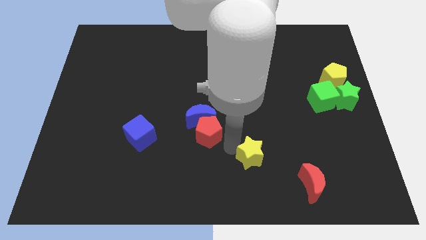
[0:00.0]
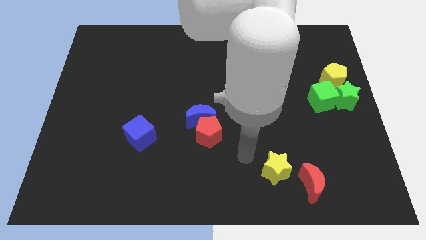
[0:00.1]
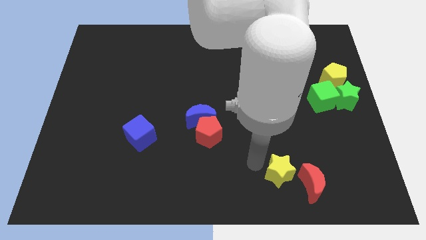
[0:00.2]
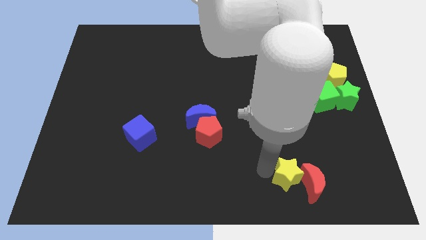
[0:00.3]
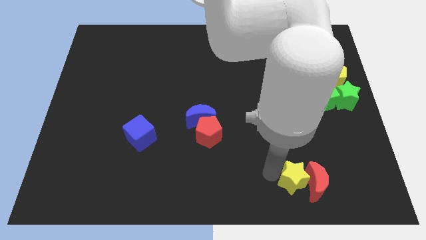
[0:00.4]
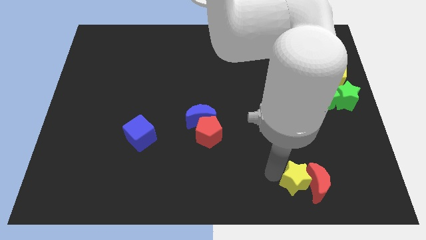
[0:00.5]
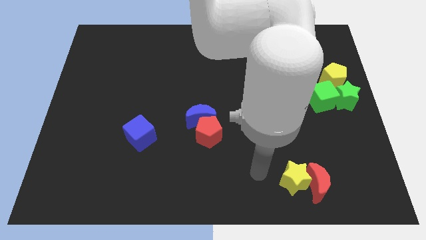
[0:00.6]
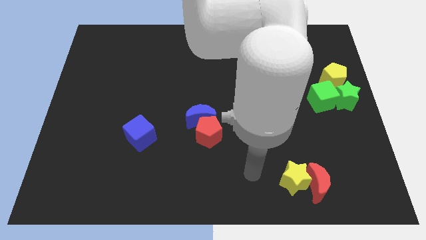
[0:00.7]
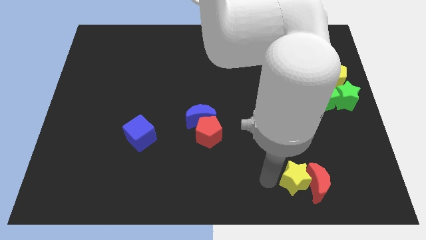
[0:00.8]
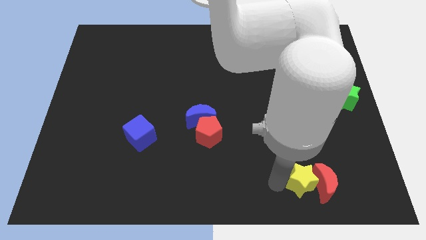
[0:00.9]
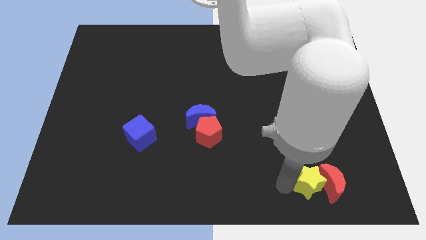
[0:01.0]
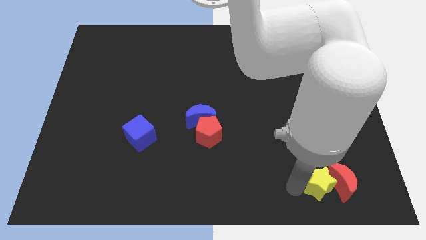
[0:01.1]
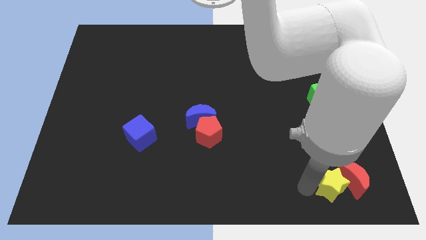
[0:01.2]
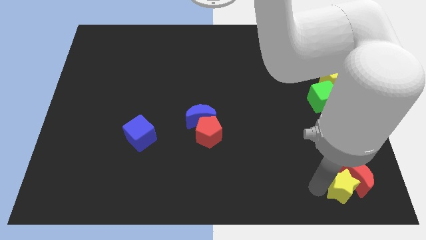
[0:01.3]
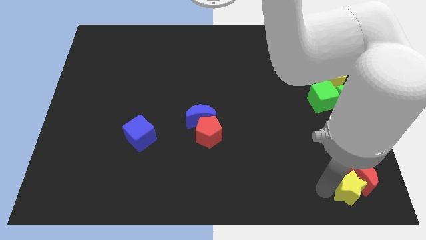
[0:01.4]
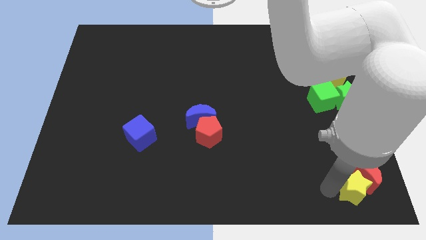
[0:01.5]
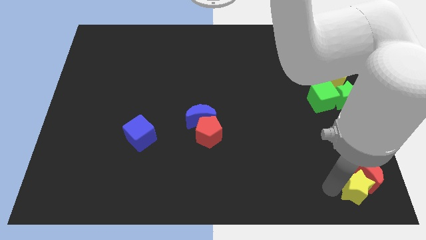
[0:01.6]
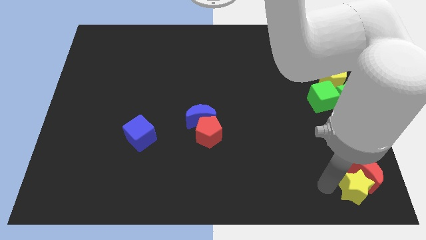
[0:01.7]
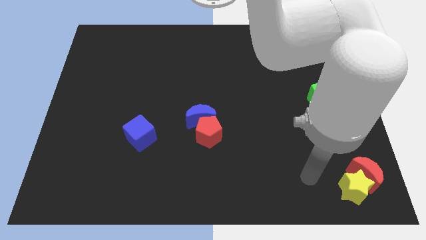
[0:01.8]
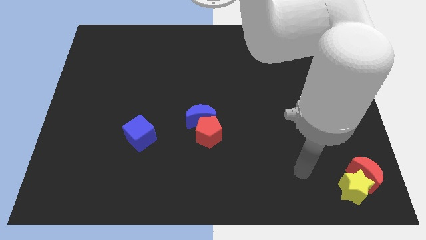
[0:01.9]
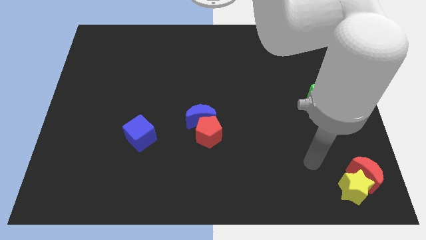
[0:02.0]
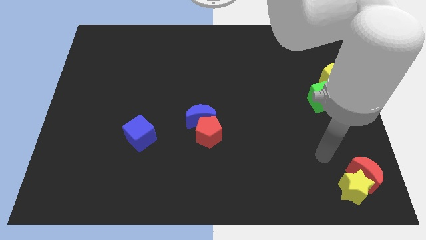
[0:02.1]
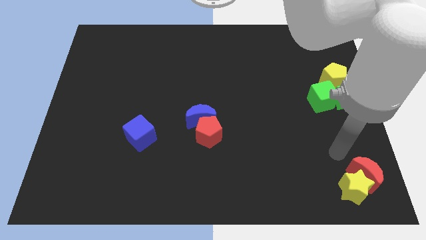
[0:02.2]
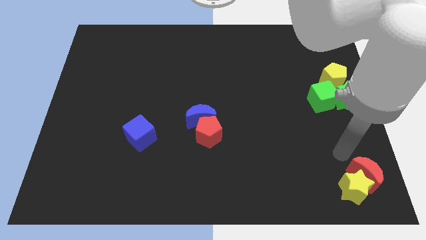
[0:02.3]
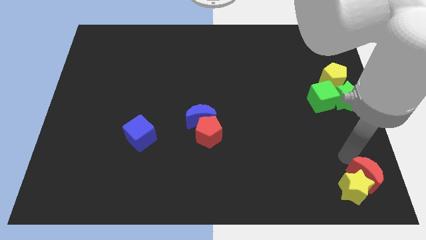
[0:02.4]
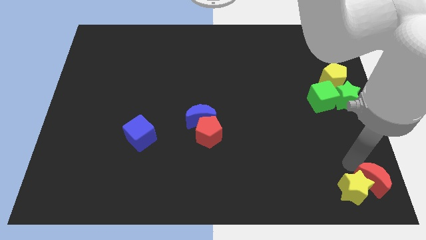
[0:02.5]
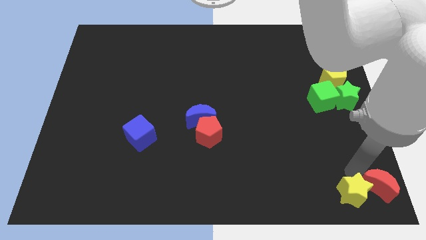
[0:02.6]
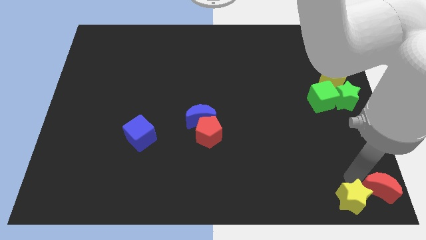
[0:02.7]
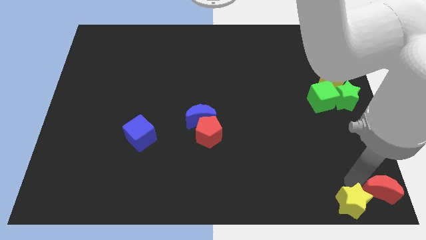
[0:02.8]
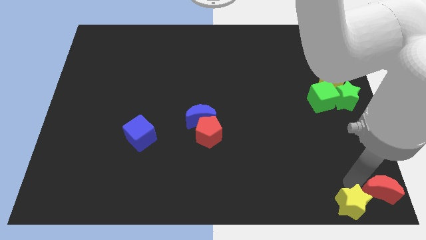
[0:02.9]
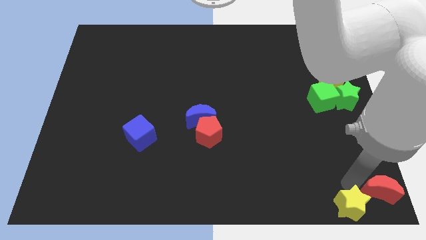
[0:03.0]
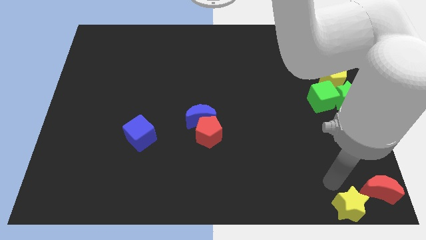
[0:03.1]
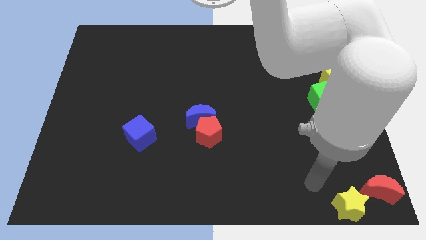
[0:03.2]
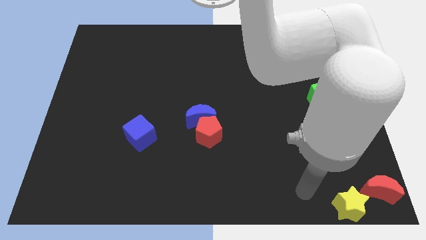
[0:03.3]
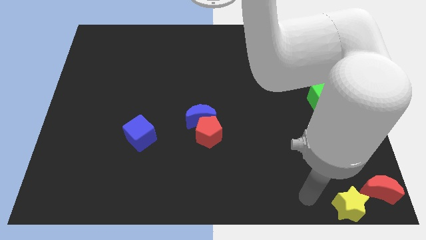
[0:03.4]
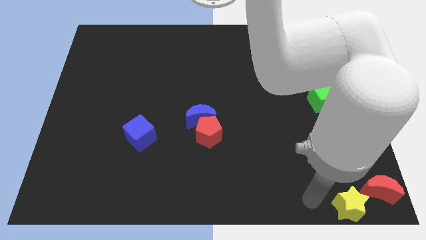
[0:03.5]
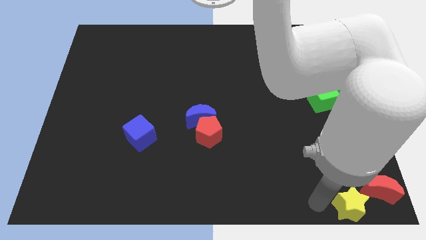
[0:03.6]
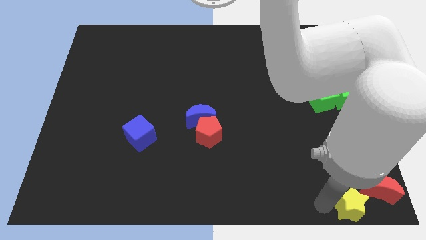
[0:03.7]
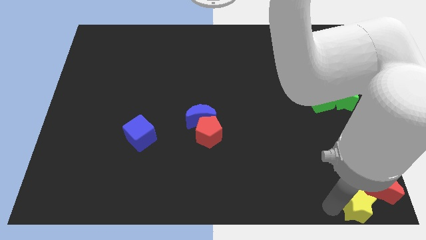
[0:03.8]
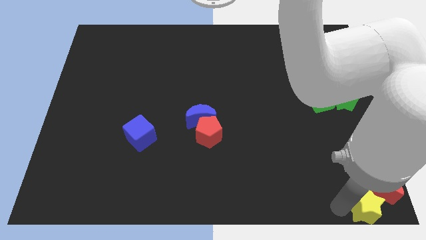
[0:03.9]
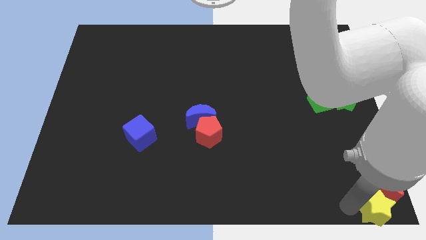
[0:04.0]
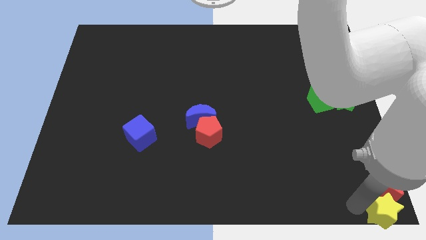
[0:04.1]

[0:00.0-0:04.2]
slide the yellow star along with the red moon to the bottom right

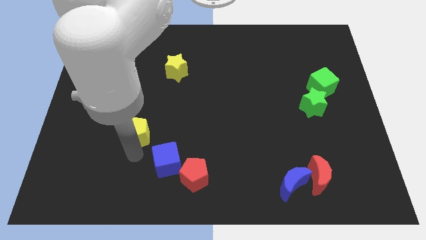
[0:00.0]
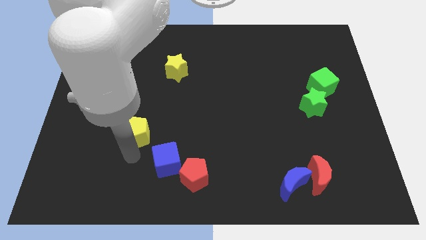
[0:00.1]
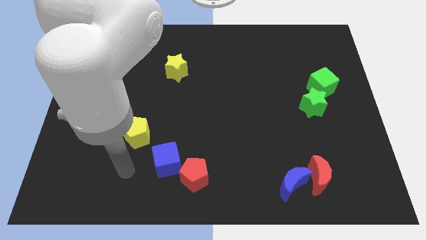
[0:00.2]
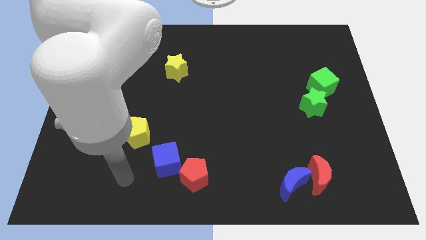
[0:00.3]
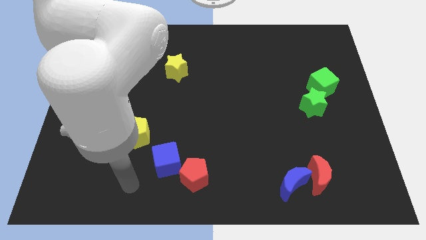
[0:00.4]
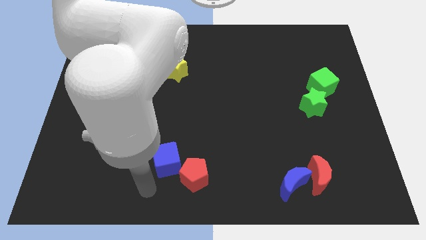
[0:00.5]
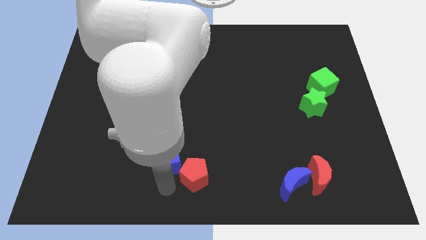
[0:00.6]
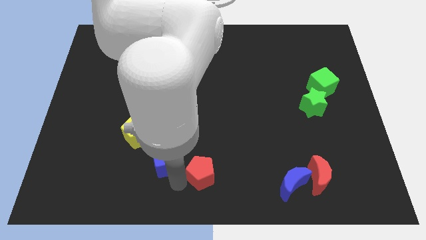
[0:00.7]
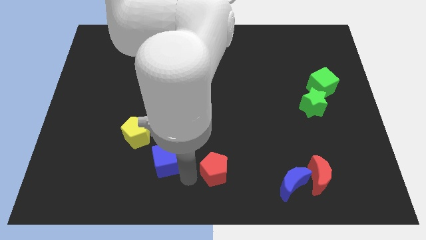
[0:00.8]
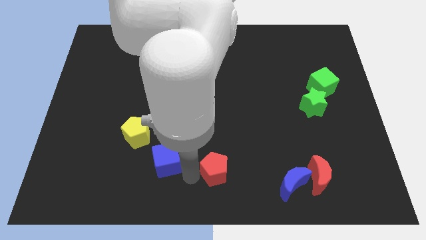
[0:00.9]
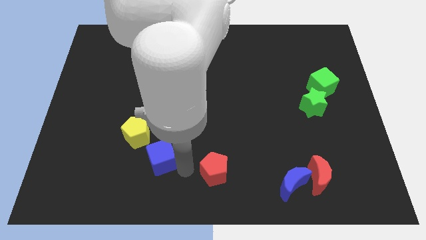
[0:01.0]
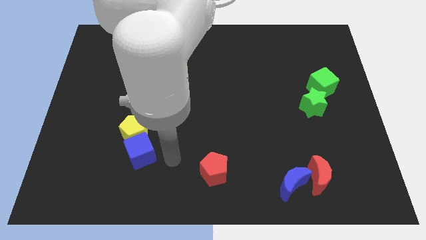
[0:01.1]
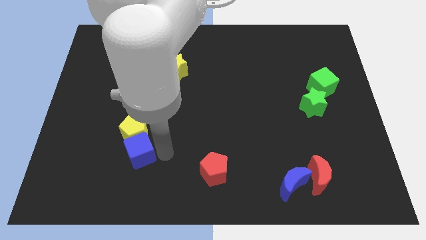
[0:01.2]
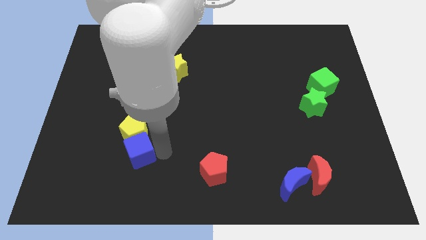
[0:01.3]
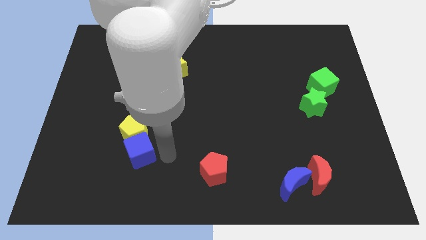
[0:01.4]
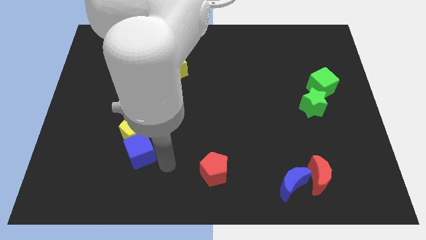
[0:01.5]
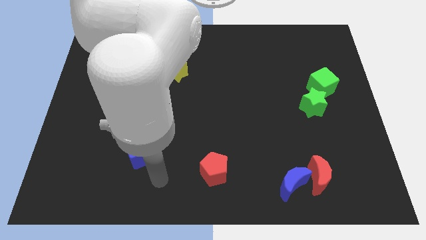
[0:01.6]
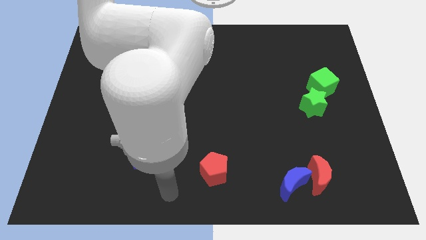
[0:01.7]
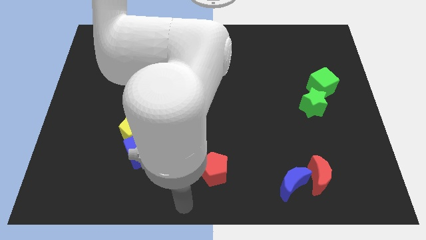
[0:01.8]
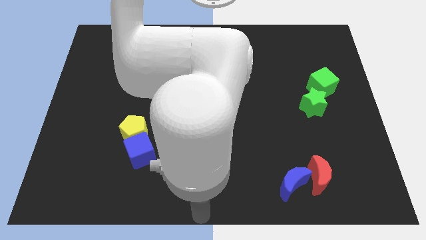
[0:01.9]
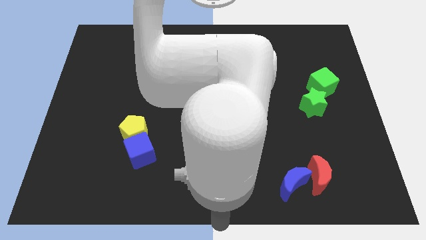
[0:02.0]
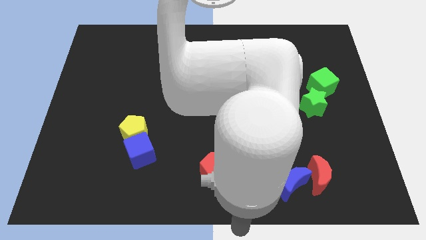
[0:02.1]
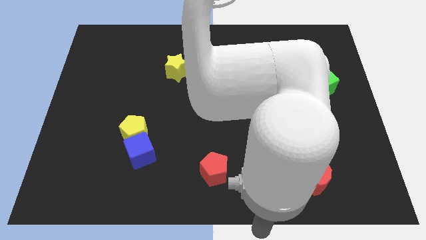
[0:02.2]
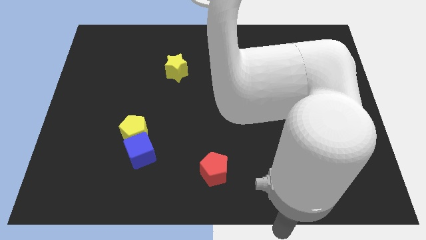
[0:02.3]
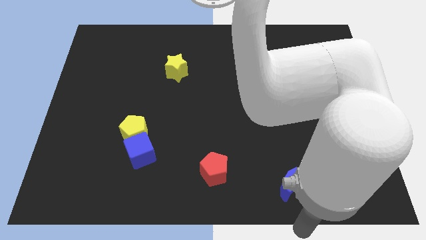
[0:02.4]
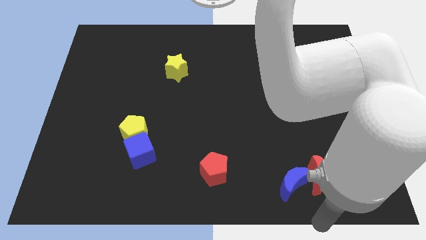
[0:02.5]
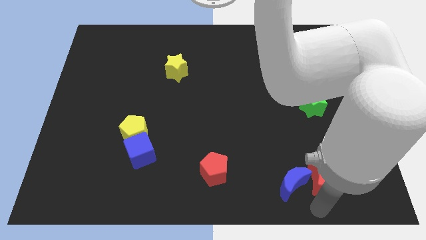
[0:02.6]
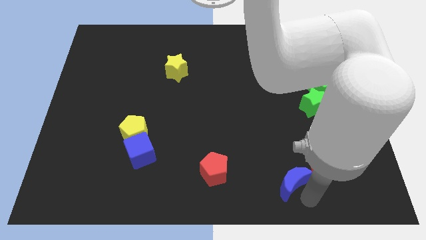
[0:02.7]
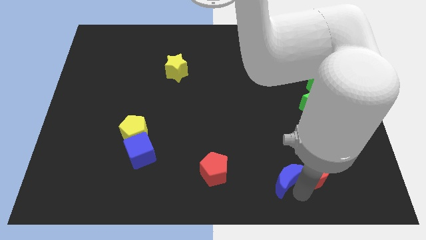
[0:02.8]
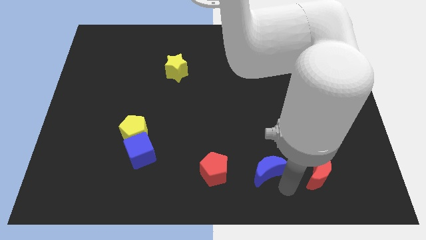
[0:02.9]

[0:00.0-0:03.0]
move the blue cube to the bottom of the yellow pentagon

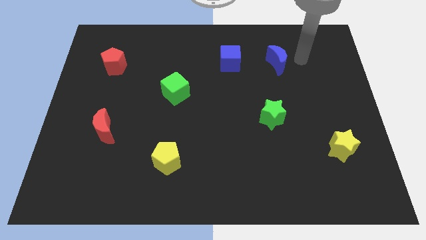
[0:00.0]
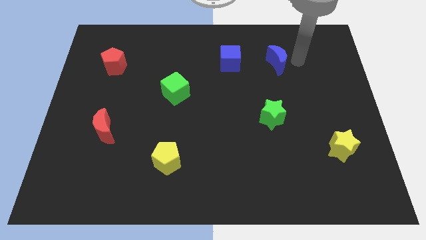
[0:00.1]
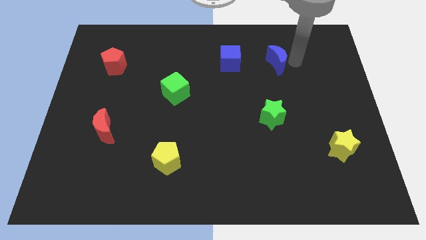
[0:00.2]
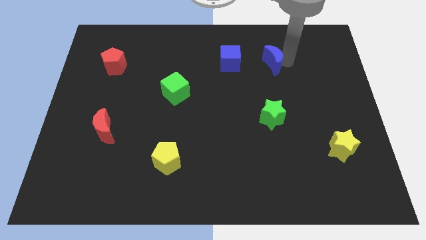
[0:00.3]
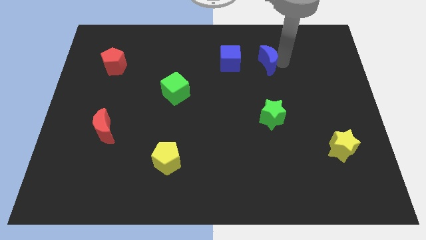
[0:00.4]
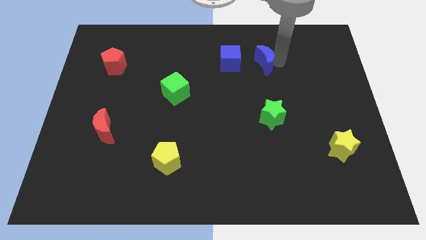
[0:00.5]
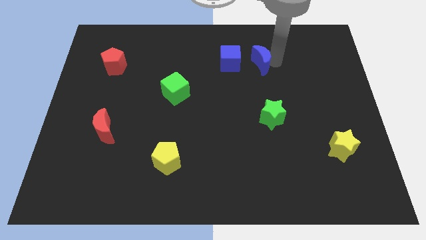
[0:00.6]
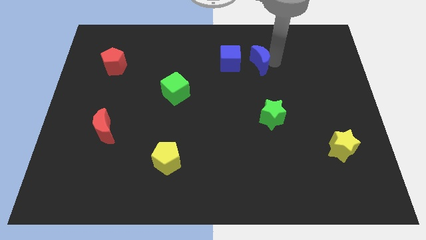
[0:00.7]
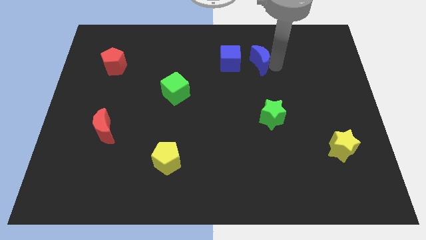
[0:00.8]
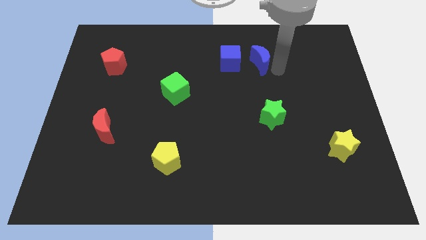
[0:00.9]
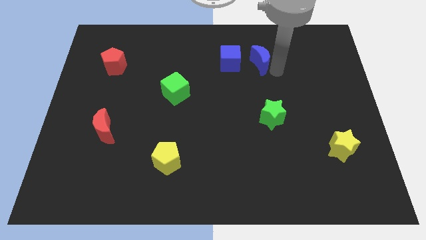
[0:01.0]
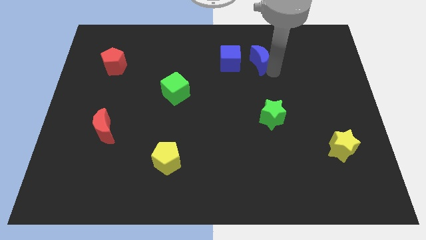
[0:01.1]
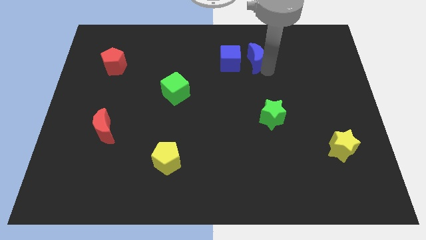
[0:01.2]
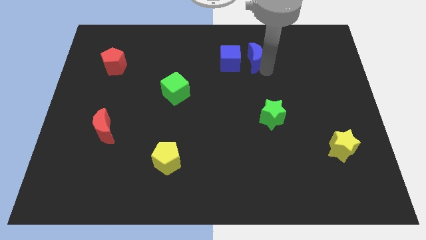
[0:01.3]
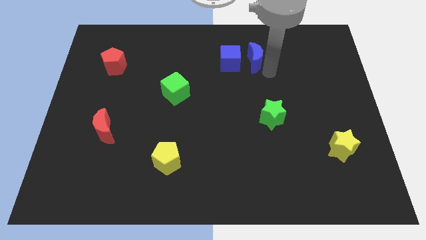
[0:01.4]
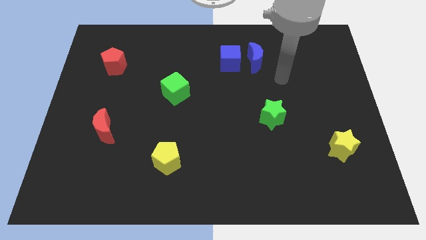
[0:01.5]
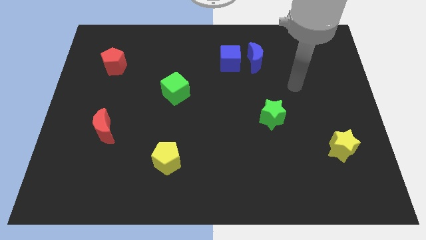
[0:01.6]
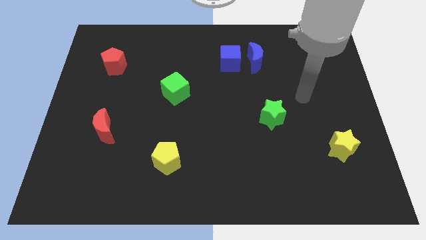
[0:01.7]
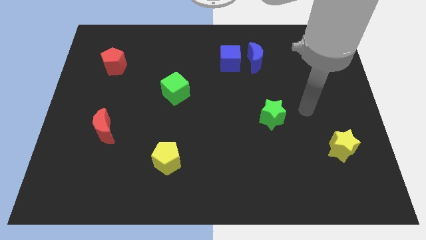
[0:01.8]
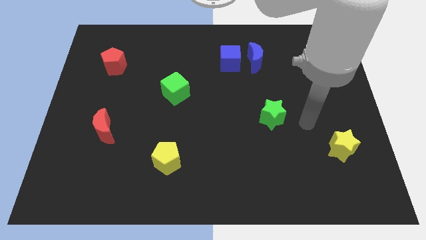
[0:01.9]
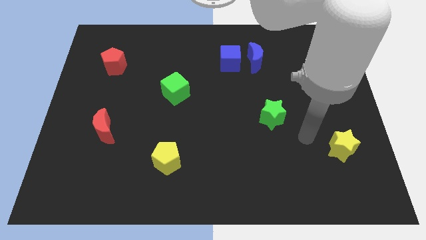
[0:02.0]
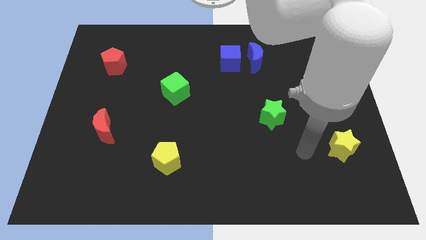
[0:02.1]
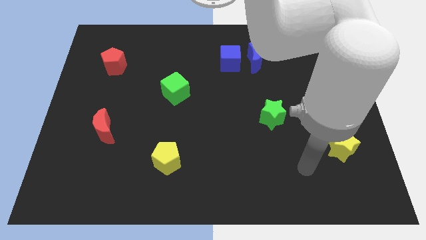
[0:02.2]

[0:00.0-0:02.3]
move the blue moon to the right of the blue cube
